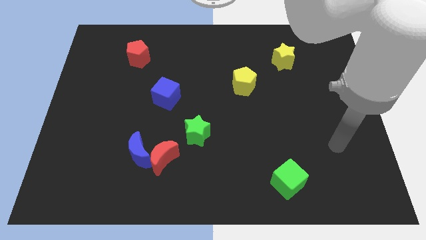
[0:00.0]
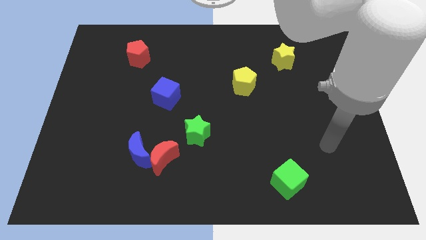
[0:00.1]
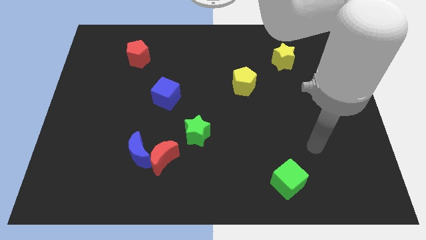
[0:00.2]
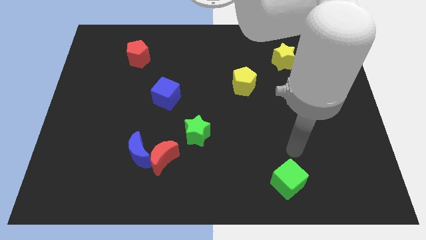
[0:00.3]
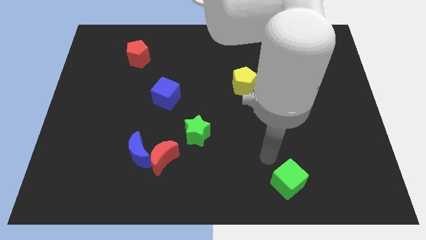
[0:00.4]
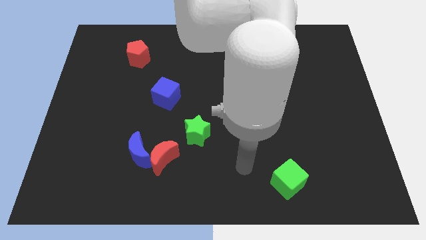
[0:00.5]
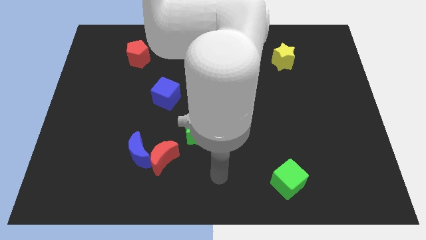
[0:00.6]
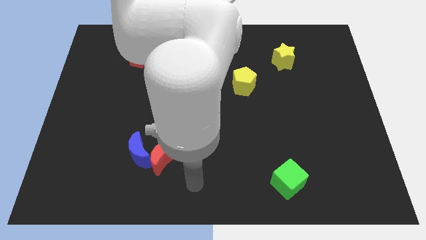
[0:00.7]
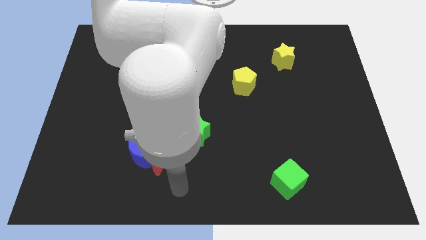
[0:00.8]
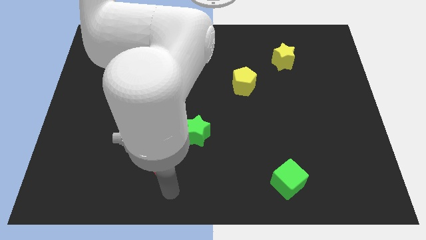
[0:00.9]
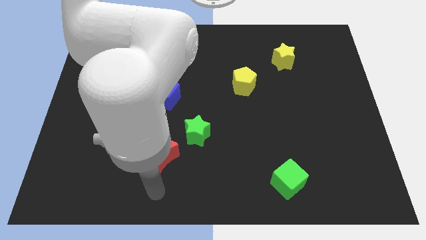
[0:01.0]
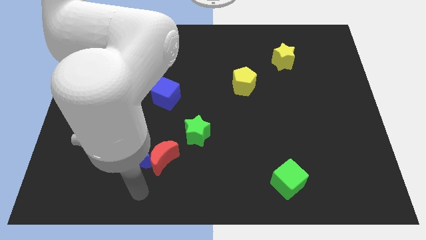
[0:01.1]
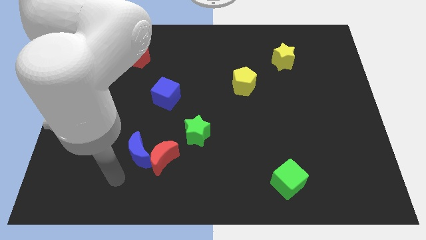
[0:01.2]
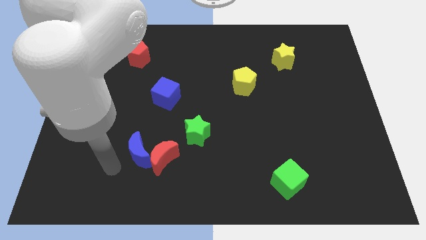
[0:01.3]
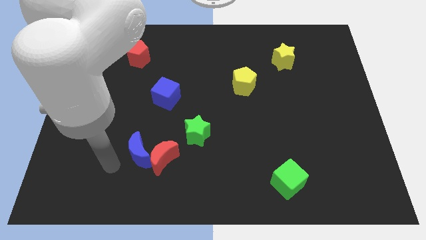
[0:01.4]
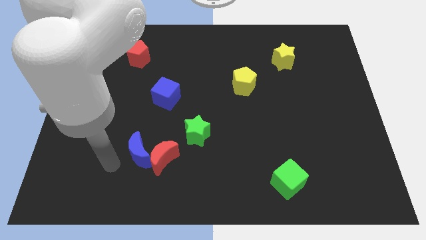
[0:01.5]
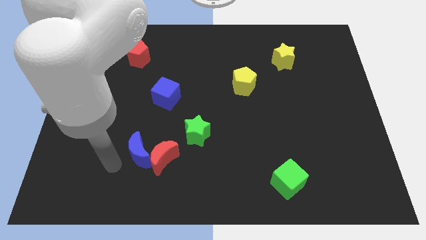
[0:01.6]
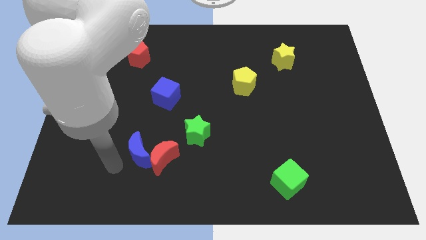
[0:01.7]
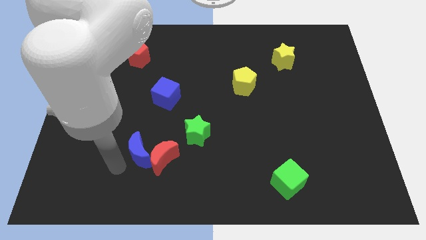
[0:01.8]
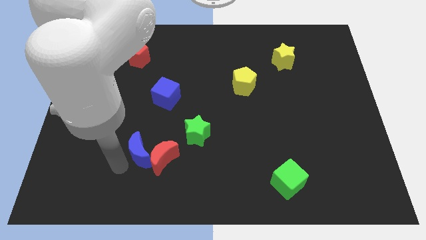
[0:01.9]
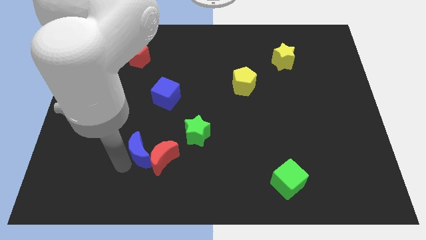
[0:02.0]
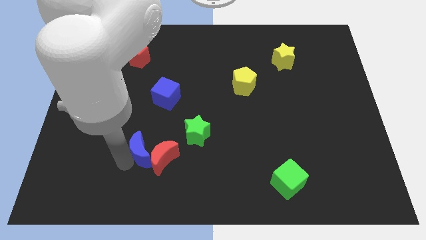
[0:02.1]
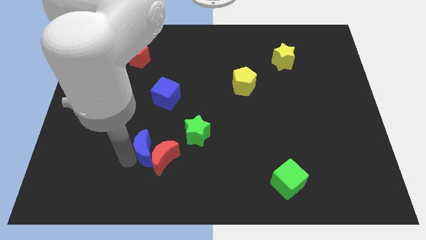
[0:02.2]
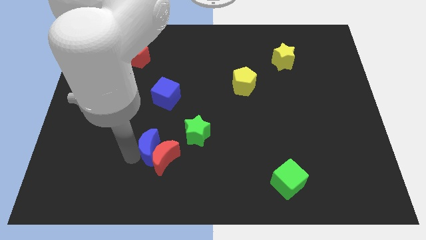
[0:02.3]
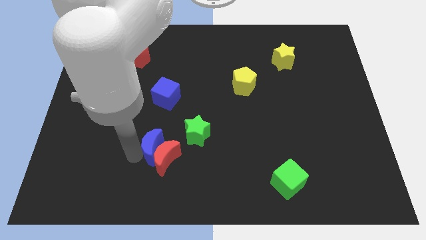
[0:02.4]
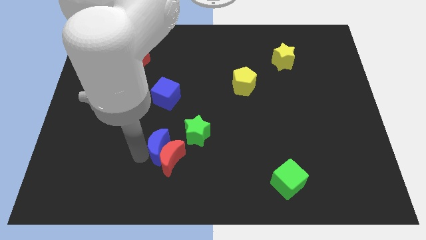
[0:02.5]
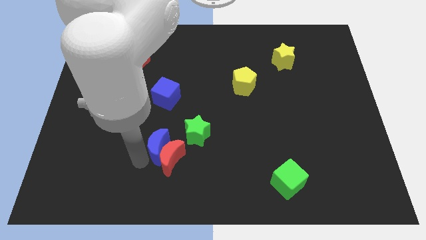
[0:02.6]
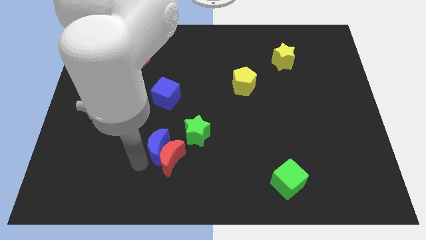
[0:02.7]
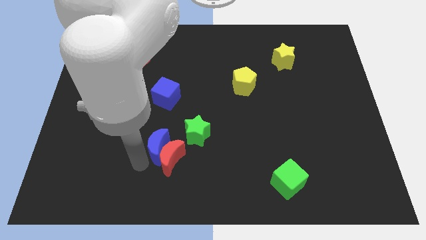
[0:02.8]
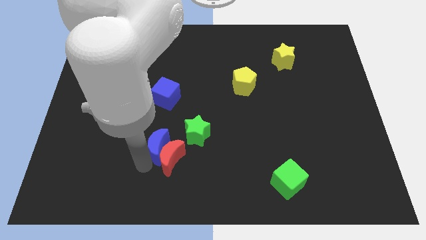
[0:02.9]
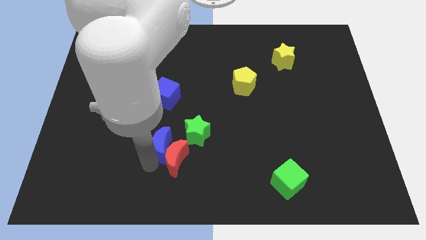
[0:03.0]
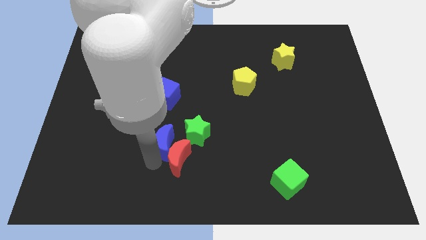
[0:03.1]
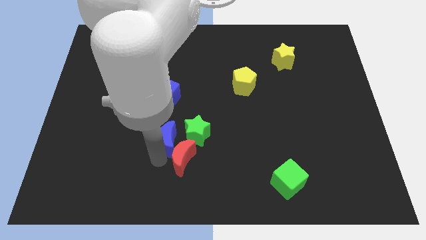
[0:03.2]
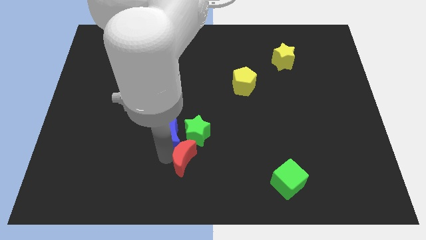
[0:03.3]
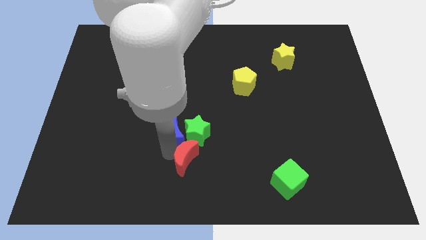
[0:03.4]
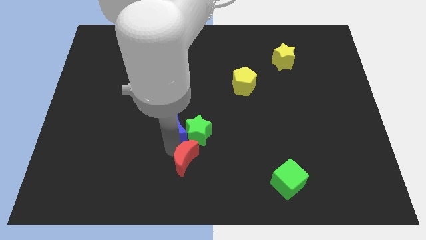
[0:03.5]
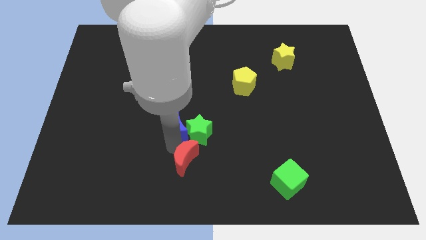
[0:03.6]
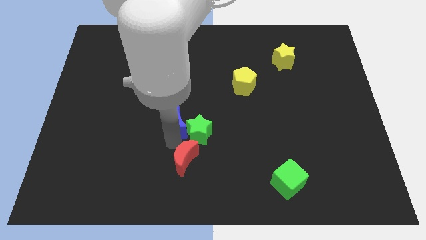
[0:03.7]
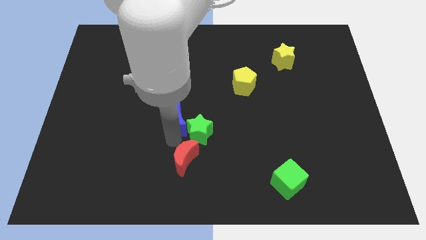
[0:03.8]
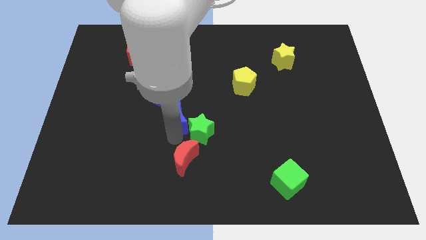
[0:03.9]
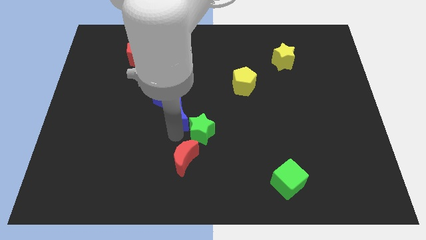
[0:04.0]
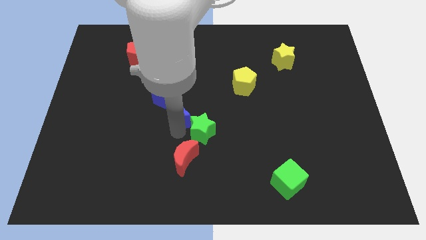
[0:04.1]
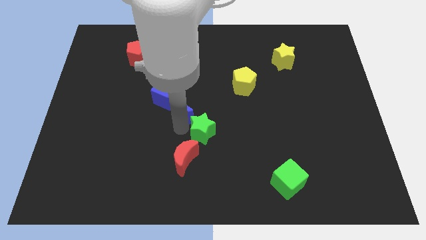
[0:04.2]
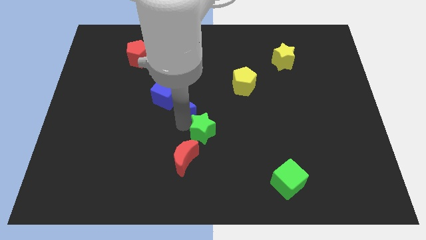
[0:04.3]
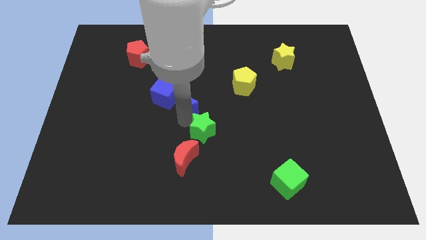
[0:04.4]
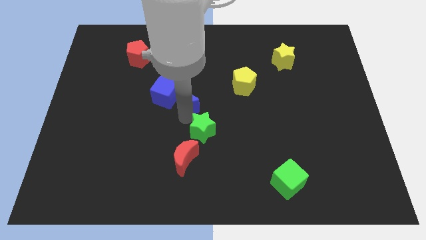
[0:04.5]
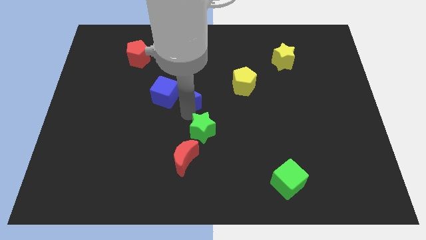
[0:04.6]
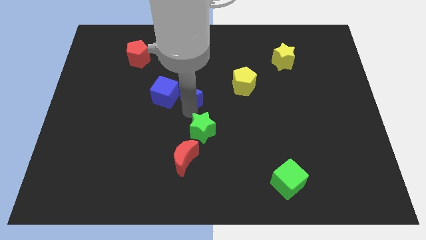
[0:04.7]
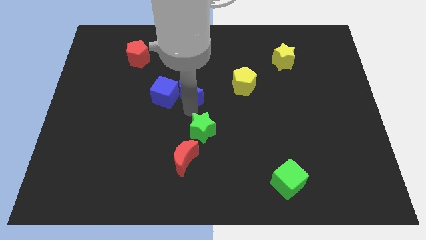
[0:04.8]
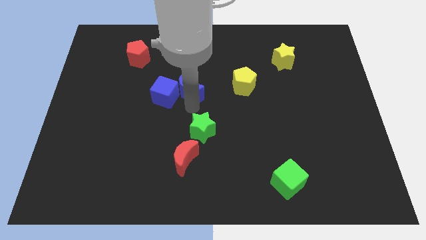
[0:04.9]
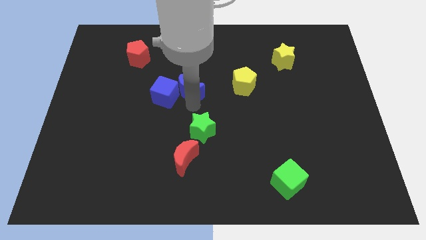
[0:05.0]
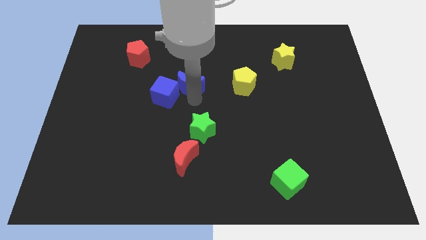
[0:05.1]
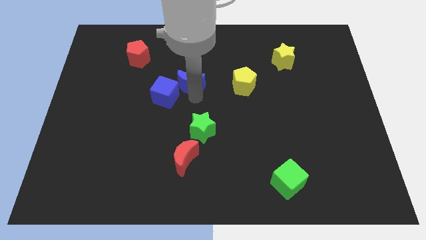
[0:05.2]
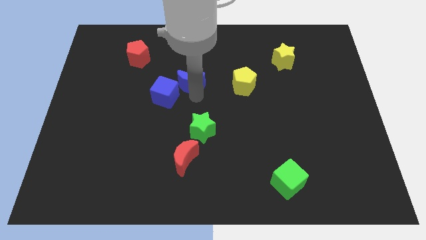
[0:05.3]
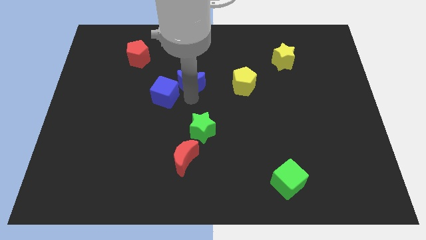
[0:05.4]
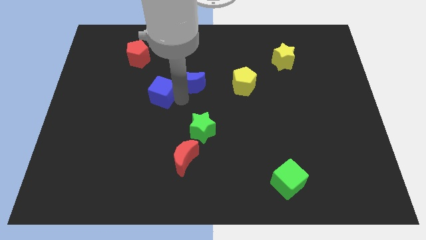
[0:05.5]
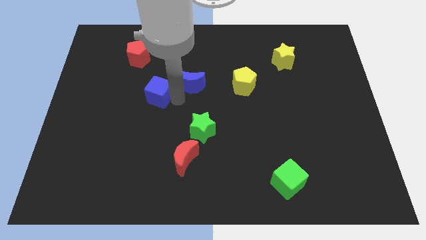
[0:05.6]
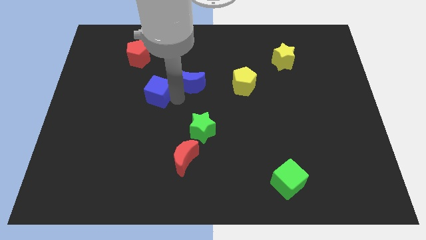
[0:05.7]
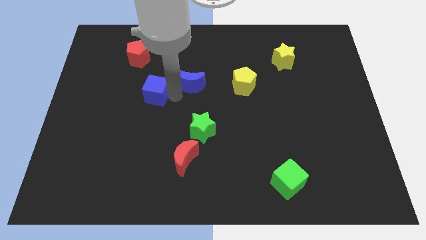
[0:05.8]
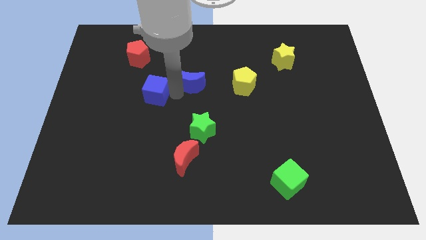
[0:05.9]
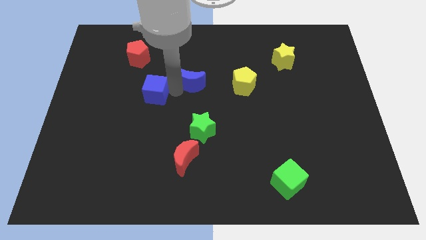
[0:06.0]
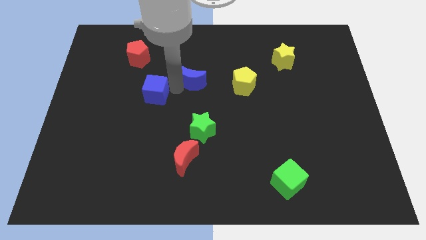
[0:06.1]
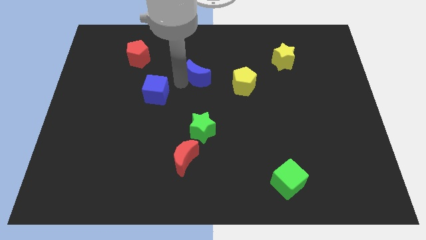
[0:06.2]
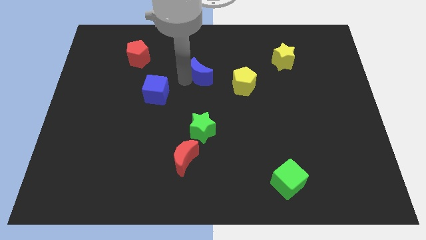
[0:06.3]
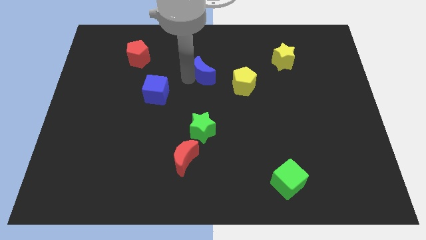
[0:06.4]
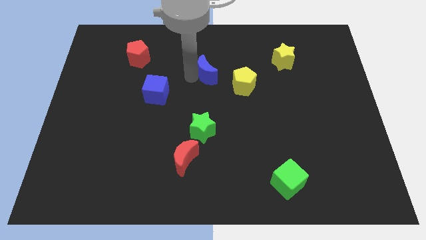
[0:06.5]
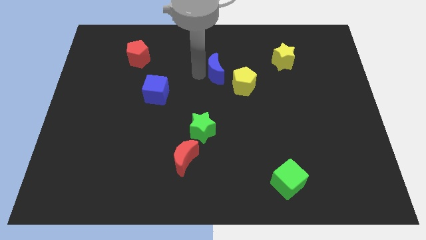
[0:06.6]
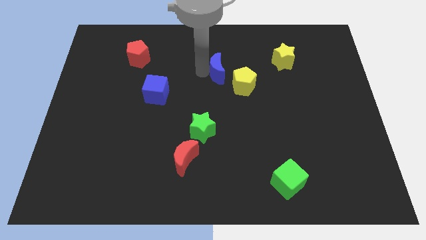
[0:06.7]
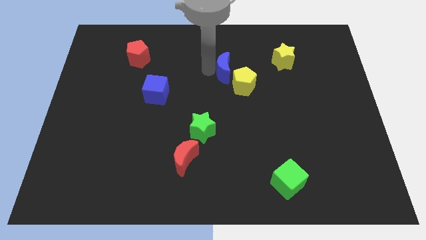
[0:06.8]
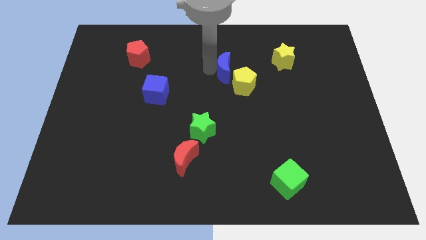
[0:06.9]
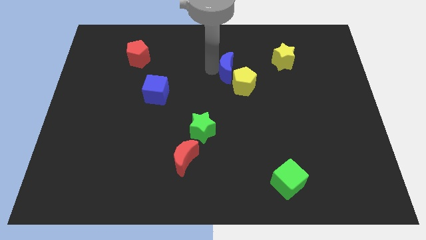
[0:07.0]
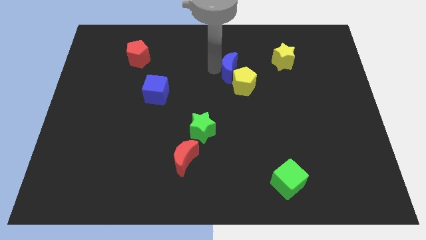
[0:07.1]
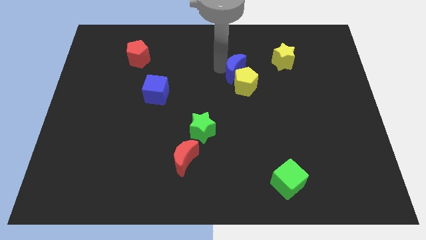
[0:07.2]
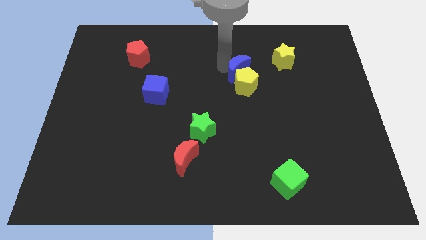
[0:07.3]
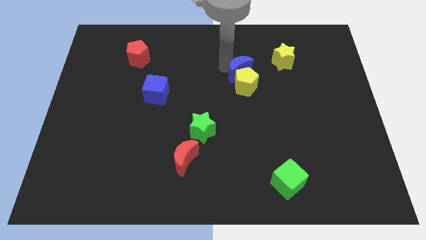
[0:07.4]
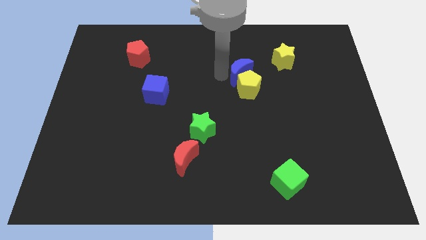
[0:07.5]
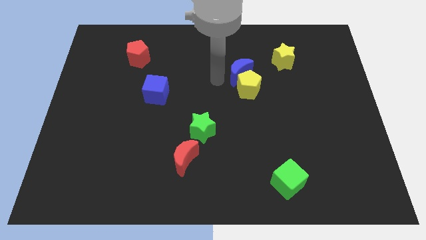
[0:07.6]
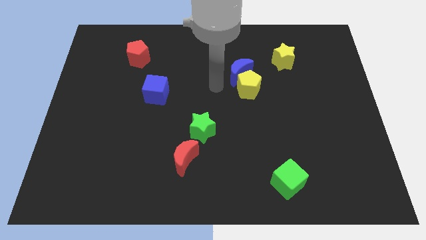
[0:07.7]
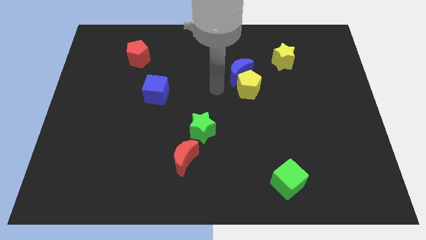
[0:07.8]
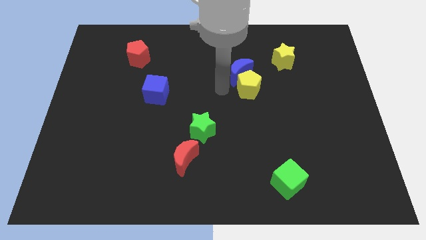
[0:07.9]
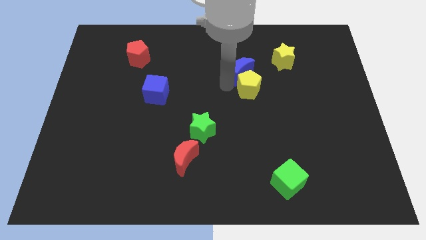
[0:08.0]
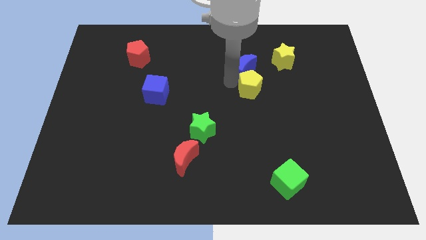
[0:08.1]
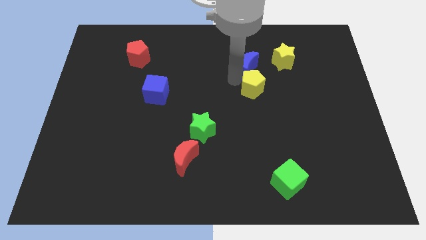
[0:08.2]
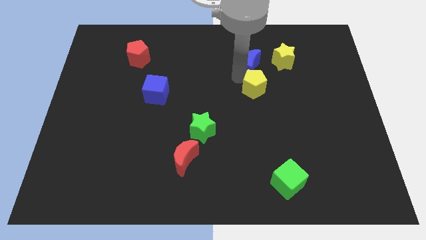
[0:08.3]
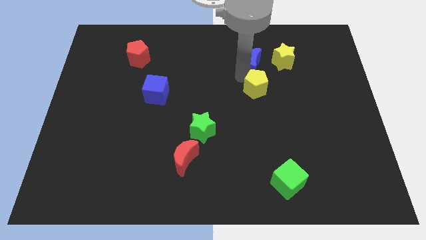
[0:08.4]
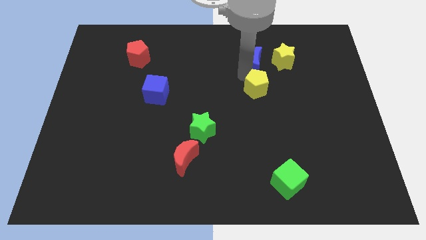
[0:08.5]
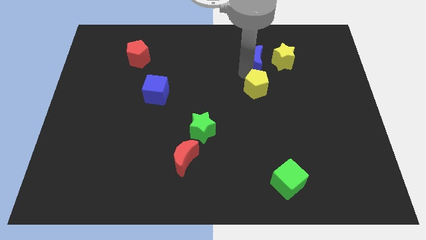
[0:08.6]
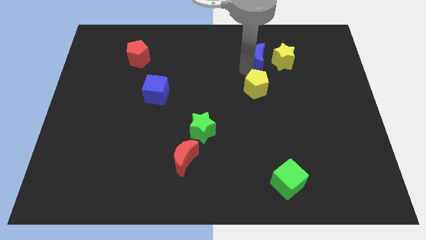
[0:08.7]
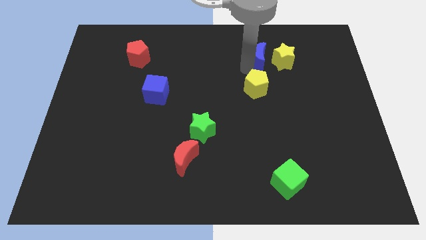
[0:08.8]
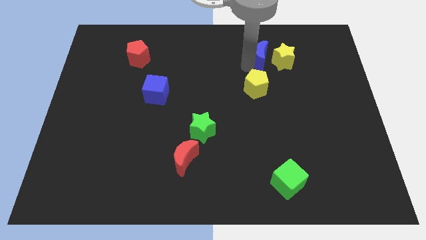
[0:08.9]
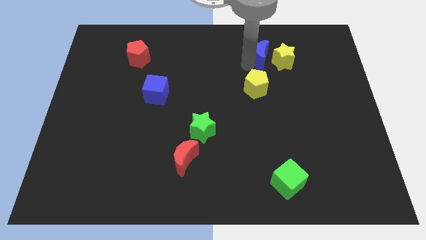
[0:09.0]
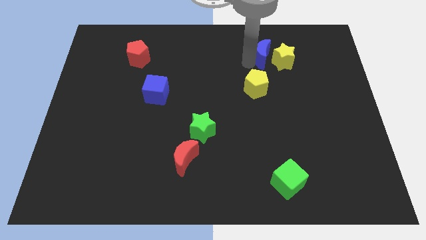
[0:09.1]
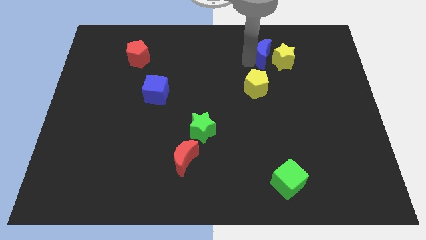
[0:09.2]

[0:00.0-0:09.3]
move the blue moon towards the yellow star
